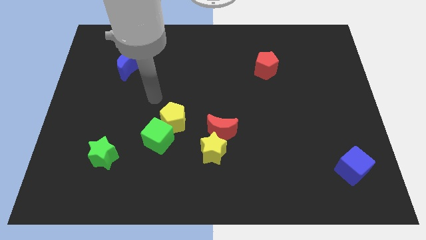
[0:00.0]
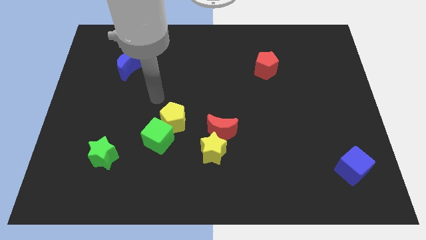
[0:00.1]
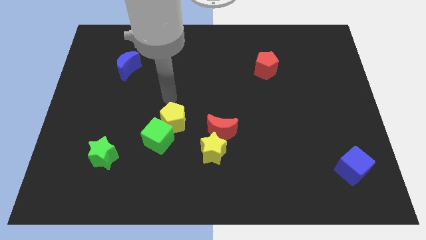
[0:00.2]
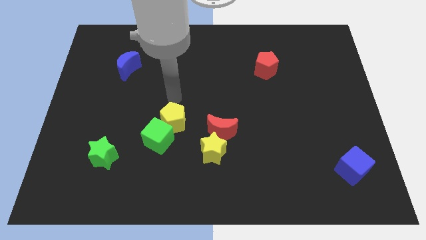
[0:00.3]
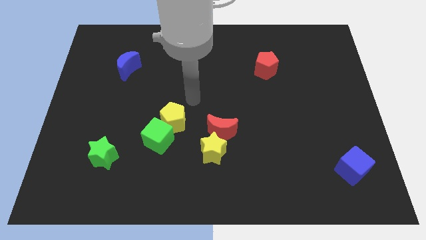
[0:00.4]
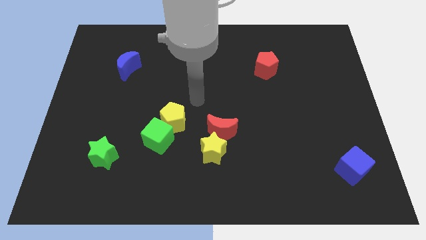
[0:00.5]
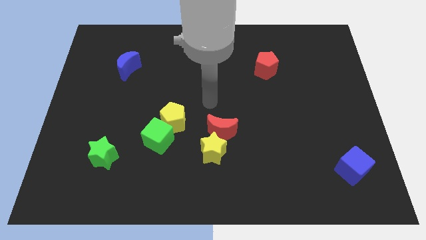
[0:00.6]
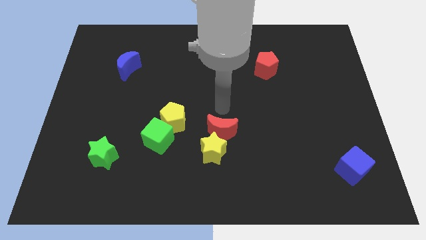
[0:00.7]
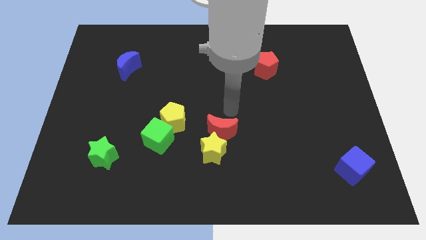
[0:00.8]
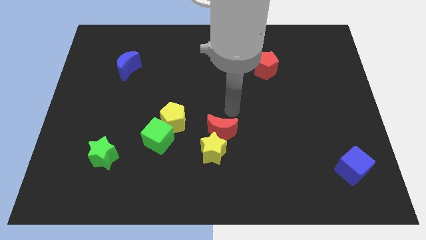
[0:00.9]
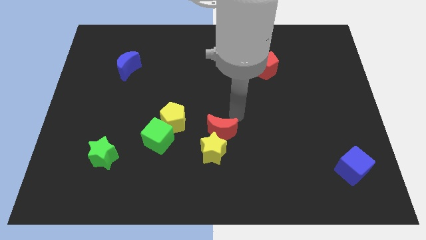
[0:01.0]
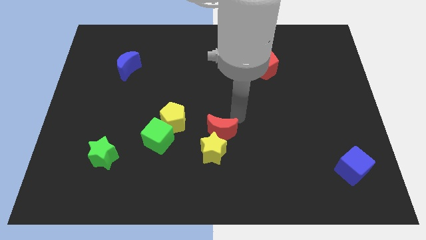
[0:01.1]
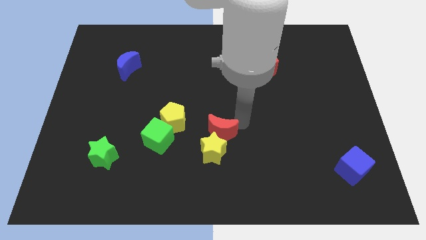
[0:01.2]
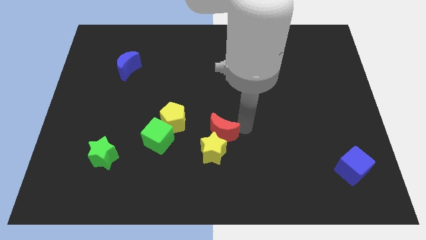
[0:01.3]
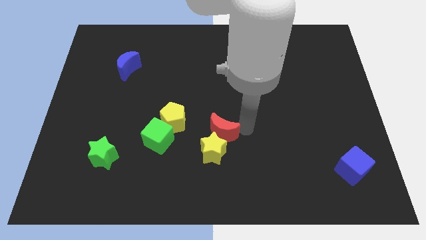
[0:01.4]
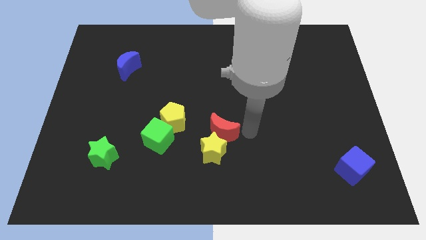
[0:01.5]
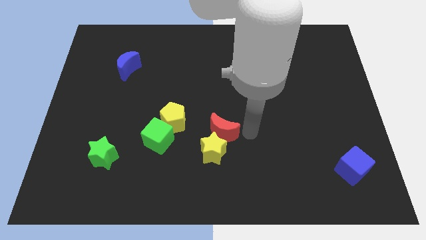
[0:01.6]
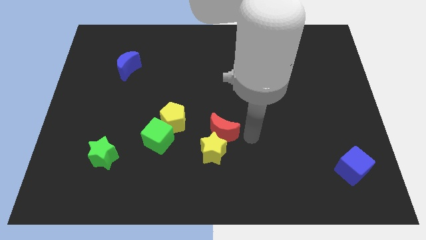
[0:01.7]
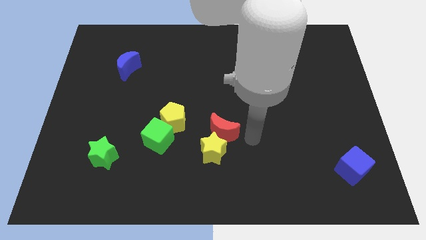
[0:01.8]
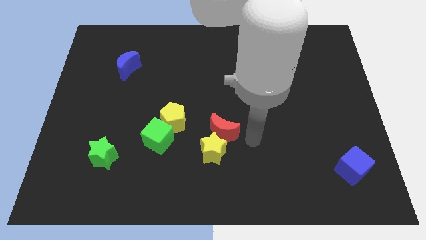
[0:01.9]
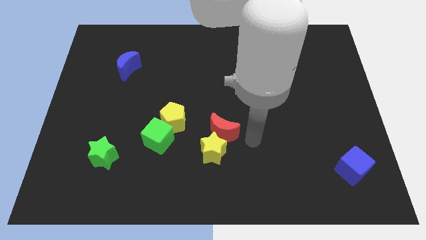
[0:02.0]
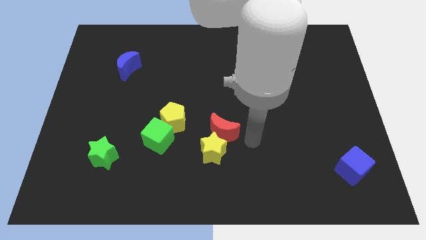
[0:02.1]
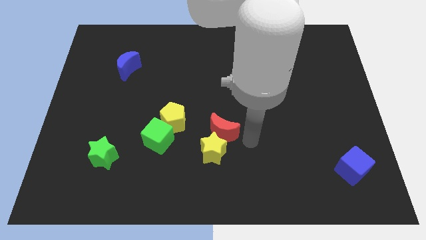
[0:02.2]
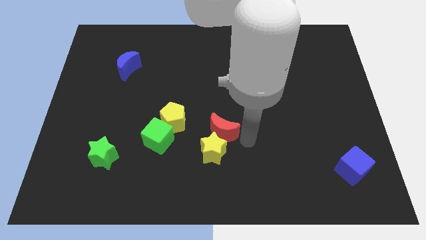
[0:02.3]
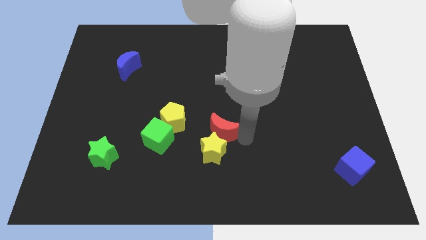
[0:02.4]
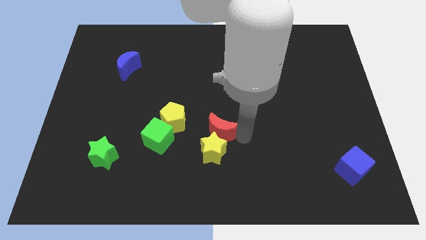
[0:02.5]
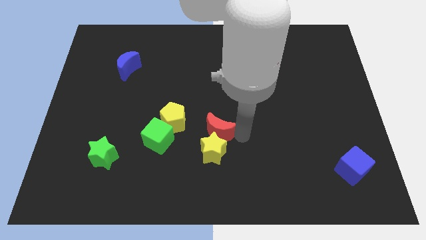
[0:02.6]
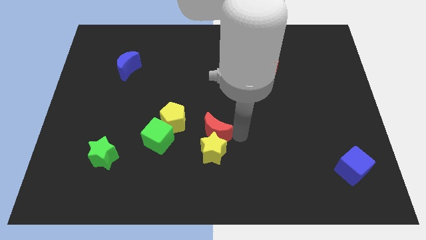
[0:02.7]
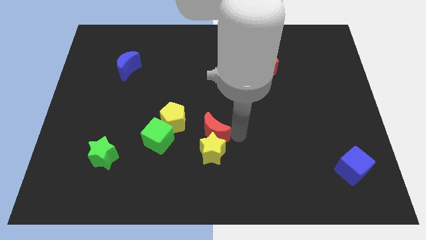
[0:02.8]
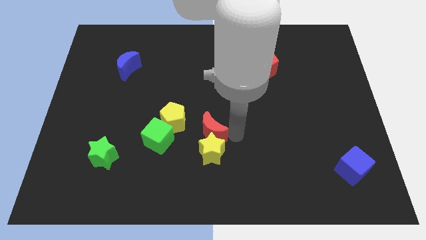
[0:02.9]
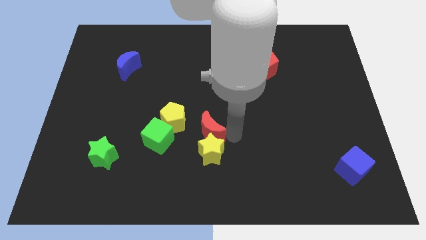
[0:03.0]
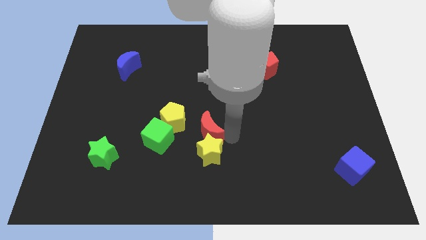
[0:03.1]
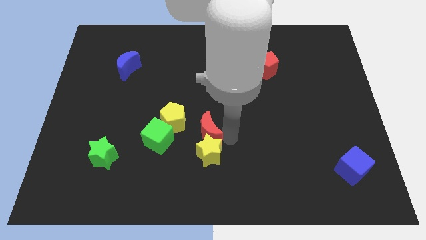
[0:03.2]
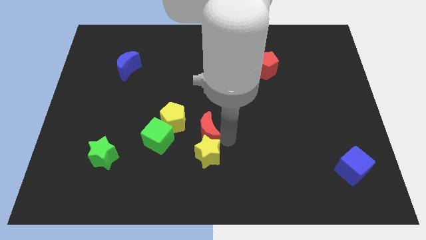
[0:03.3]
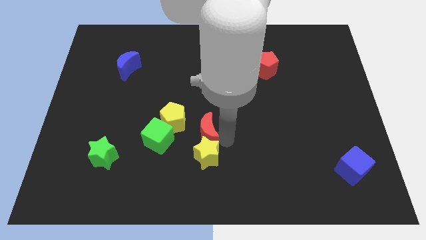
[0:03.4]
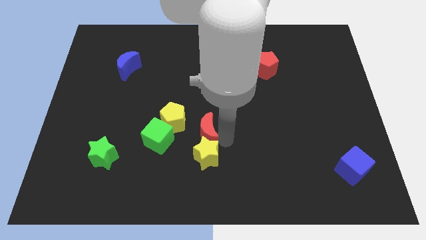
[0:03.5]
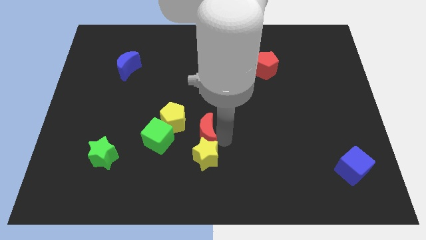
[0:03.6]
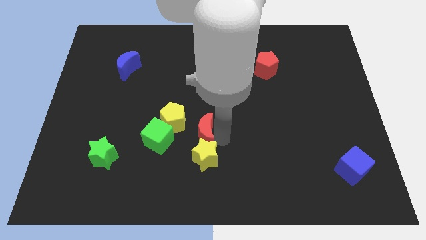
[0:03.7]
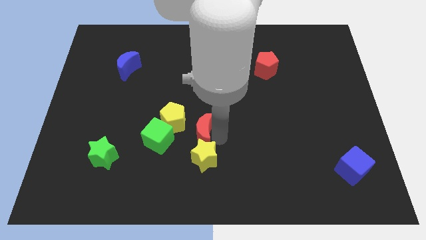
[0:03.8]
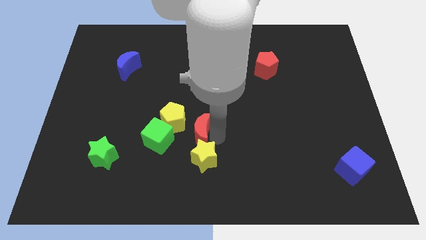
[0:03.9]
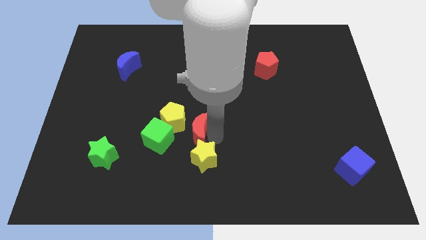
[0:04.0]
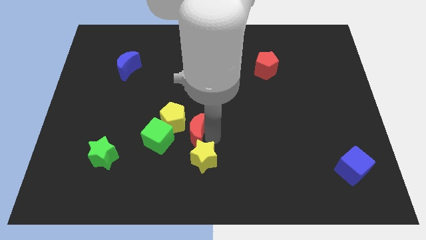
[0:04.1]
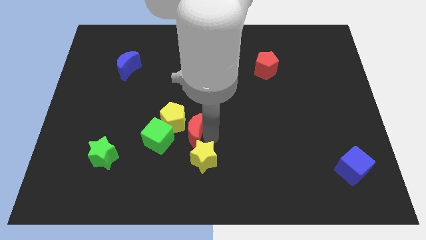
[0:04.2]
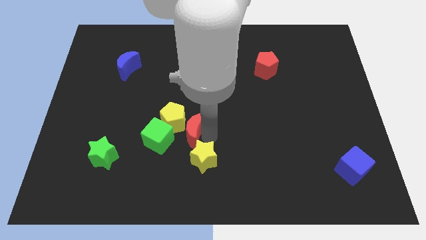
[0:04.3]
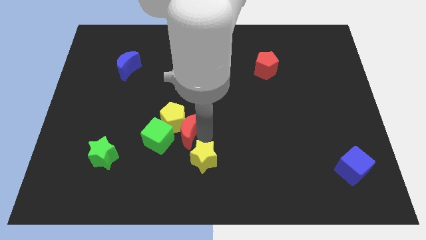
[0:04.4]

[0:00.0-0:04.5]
slide the red moon towards the yellow pentagon

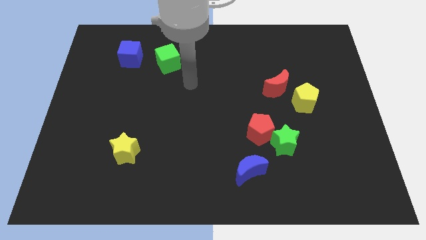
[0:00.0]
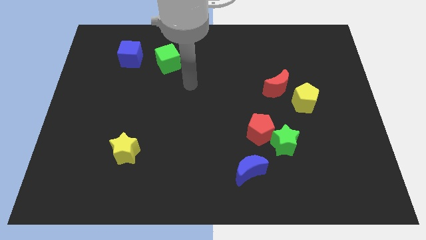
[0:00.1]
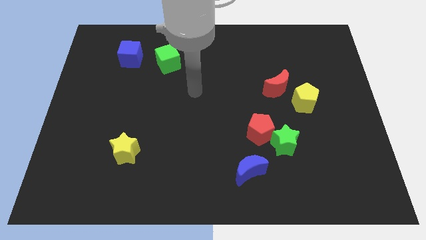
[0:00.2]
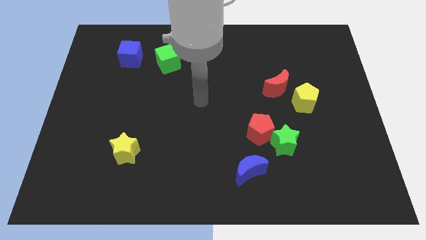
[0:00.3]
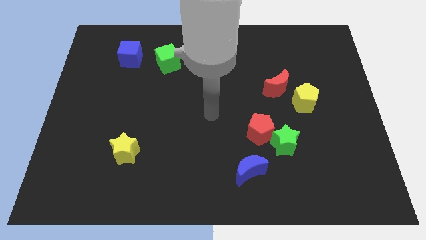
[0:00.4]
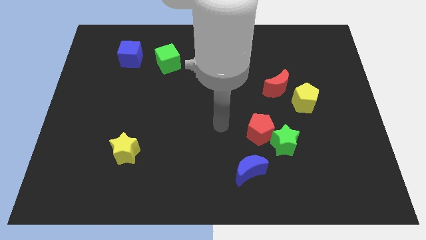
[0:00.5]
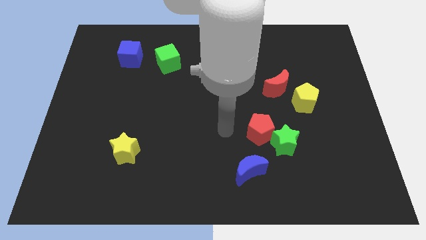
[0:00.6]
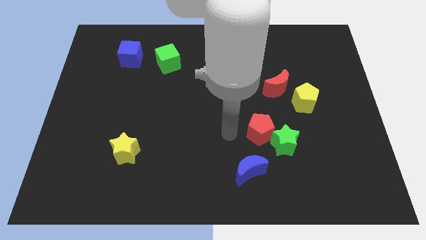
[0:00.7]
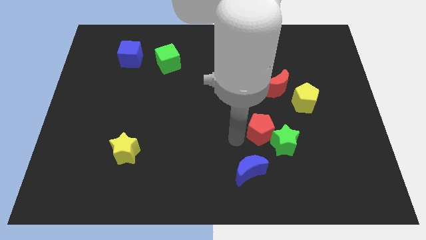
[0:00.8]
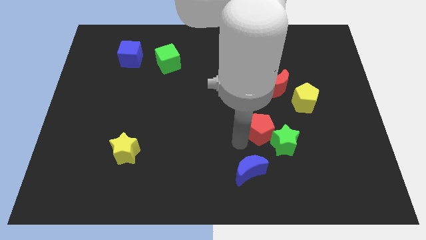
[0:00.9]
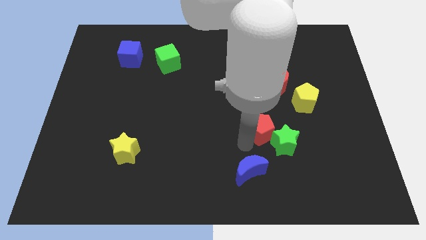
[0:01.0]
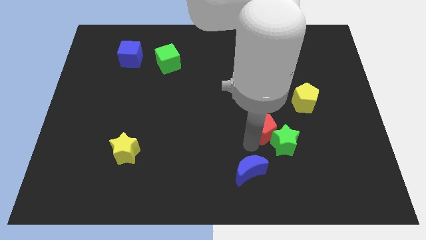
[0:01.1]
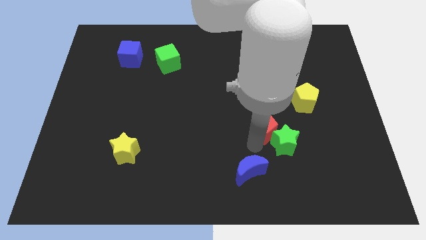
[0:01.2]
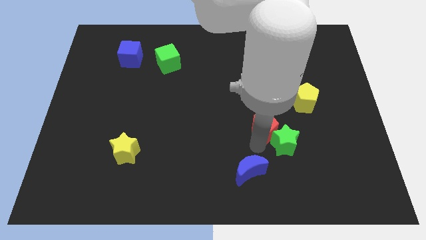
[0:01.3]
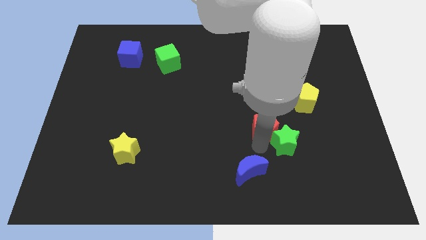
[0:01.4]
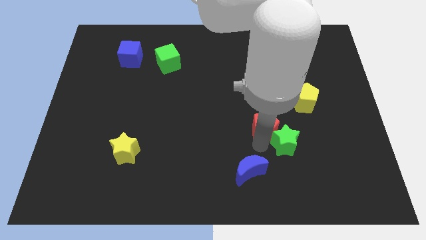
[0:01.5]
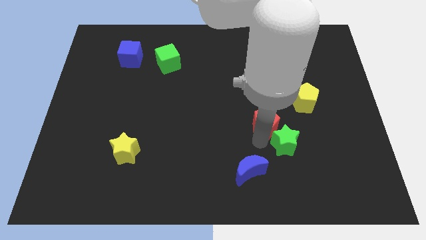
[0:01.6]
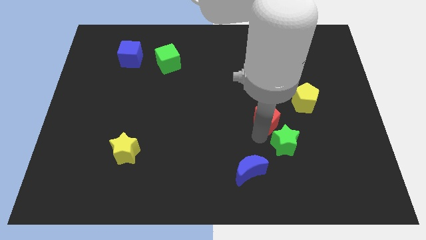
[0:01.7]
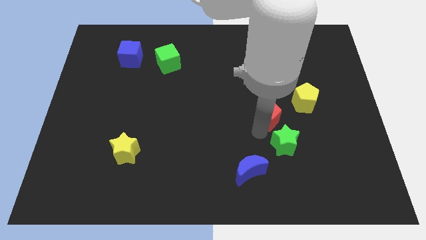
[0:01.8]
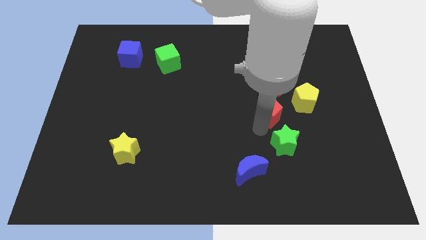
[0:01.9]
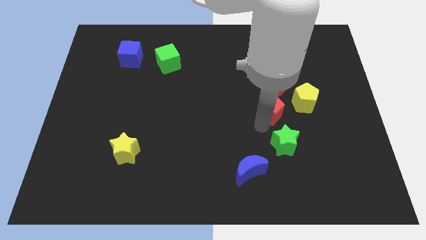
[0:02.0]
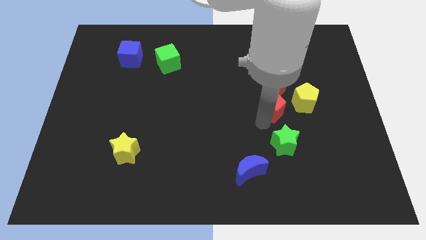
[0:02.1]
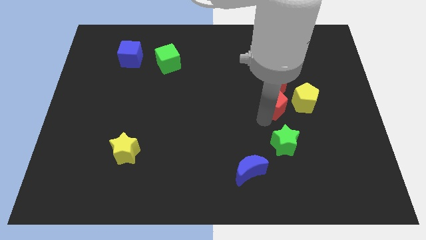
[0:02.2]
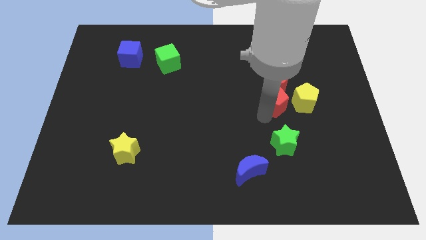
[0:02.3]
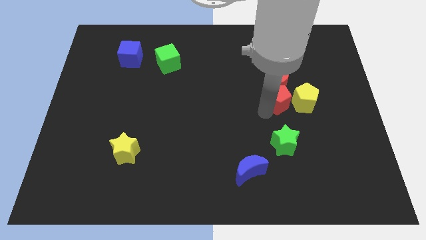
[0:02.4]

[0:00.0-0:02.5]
slide the red pentagon next to the red moon

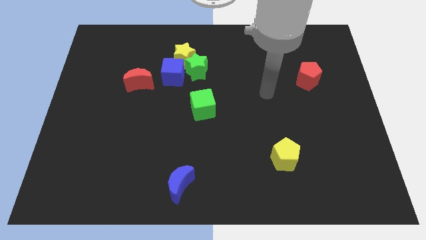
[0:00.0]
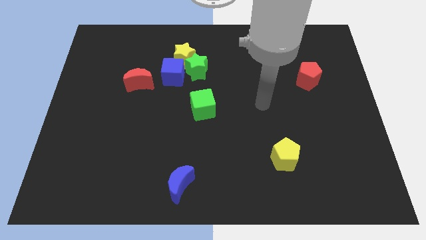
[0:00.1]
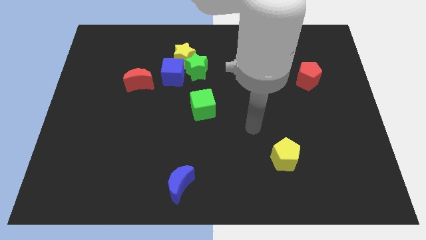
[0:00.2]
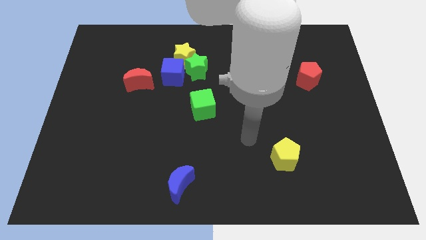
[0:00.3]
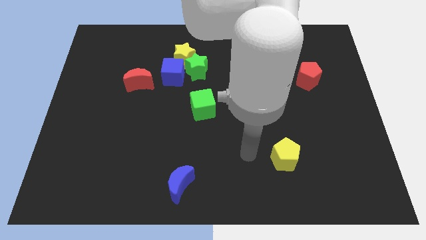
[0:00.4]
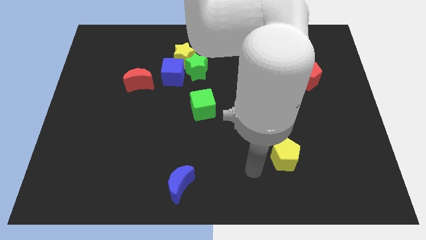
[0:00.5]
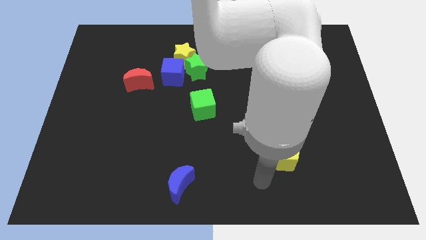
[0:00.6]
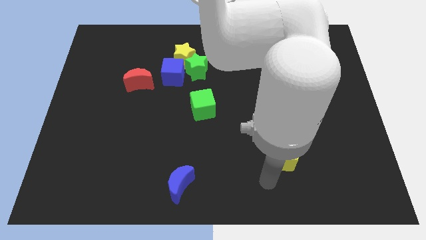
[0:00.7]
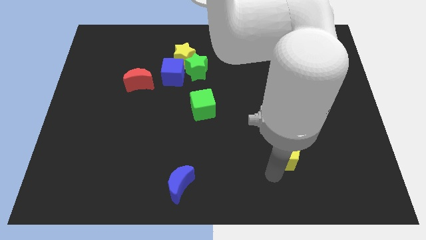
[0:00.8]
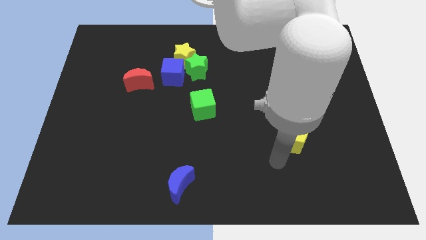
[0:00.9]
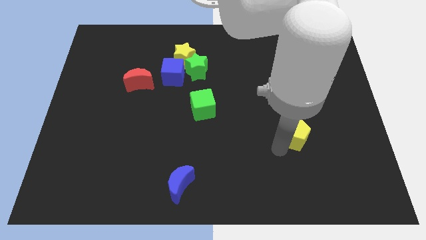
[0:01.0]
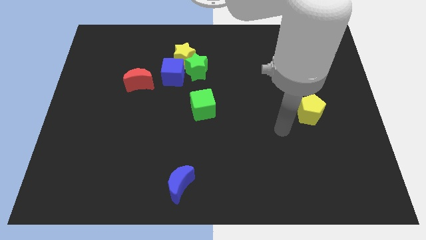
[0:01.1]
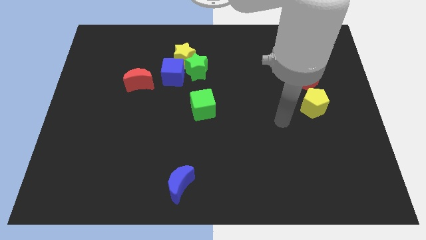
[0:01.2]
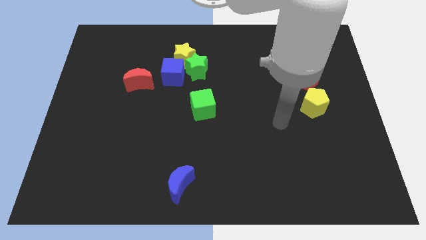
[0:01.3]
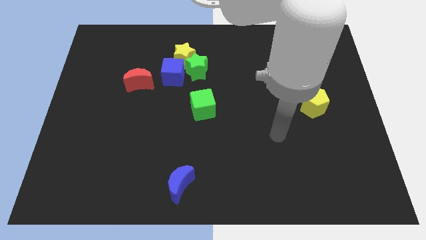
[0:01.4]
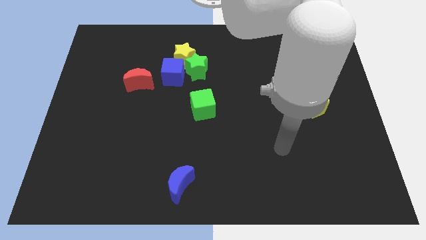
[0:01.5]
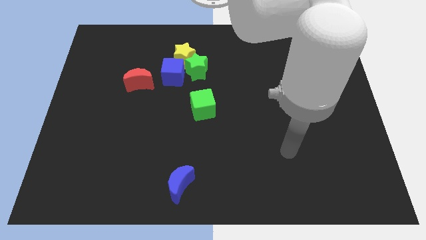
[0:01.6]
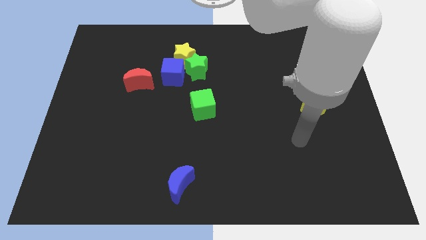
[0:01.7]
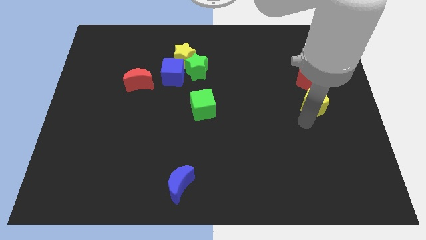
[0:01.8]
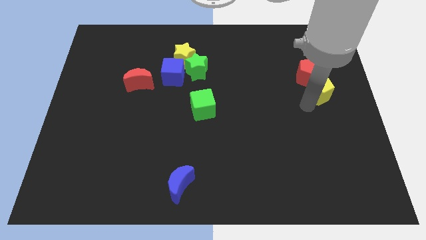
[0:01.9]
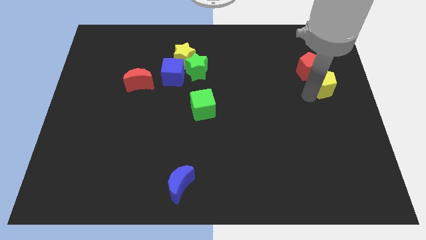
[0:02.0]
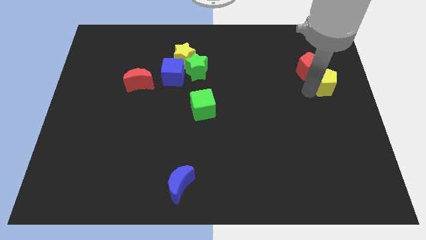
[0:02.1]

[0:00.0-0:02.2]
move the yellow pentagon towards the red pentagon
